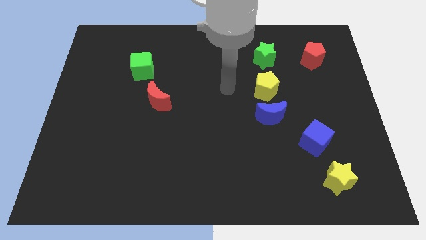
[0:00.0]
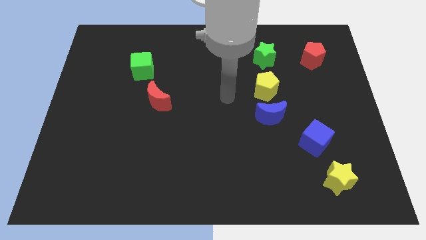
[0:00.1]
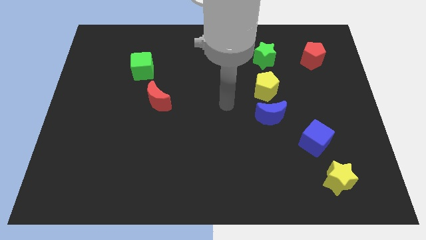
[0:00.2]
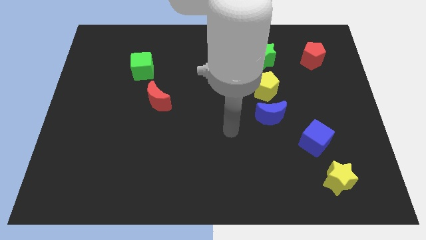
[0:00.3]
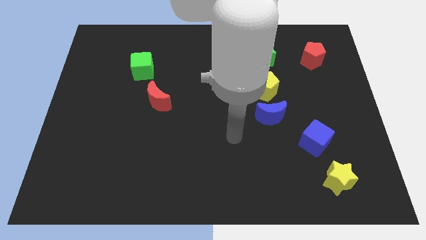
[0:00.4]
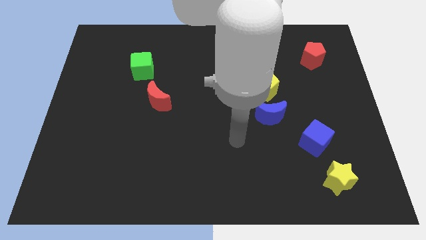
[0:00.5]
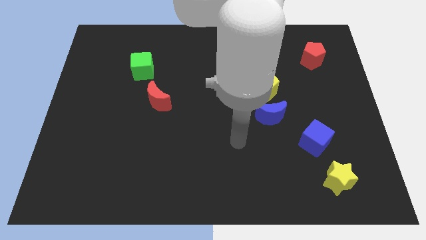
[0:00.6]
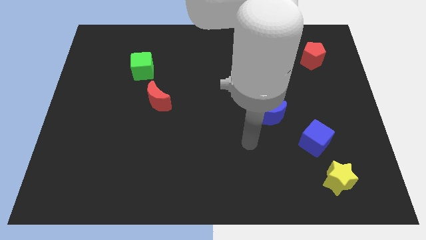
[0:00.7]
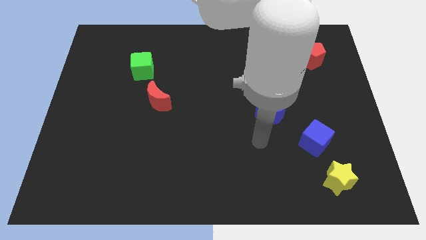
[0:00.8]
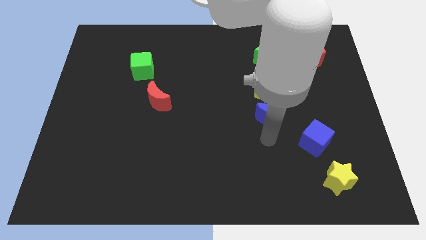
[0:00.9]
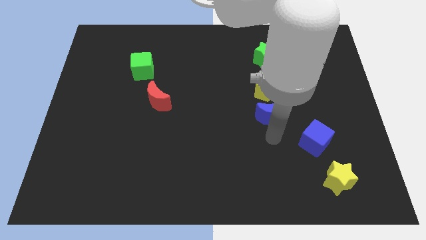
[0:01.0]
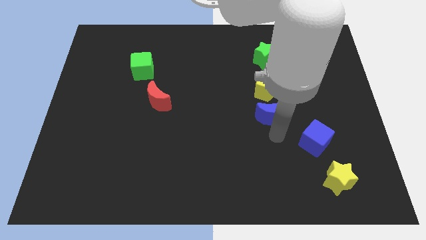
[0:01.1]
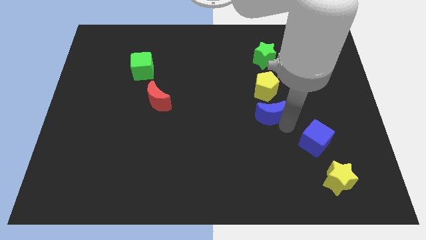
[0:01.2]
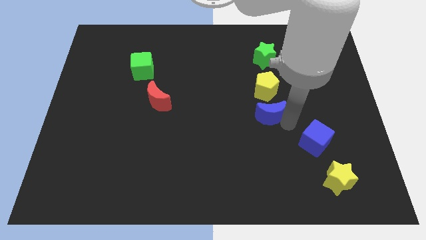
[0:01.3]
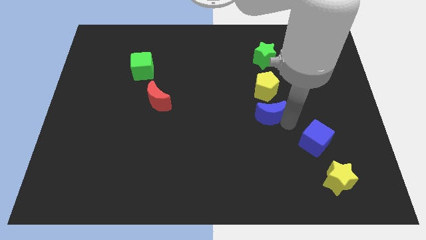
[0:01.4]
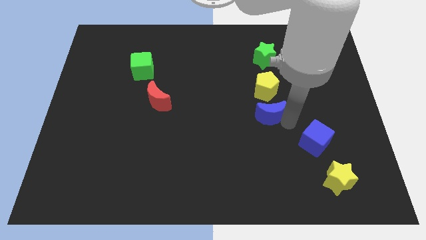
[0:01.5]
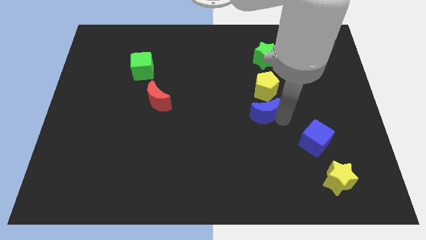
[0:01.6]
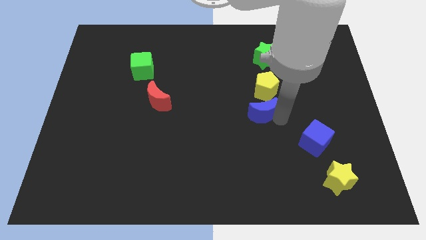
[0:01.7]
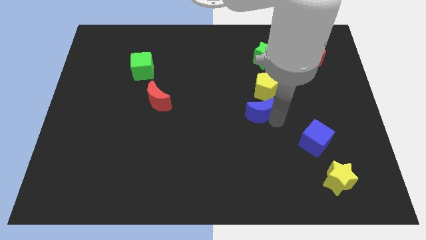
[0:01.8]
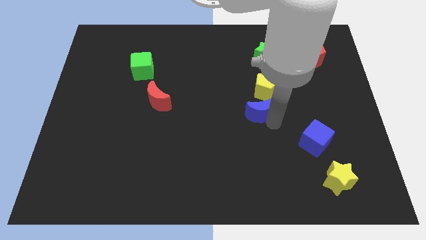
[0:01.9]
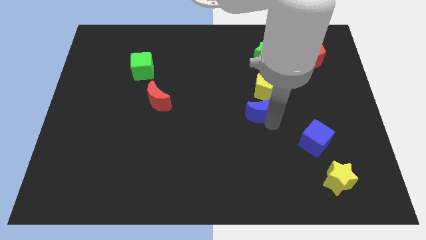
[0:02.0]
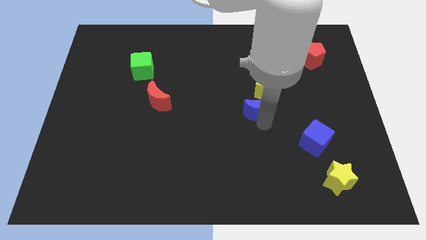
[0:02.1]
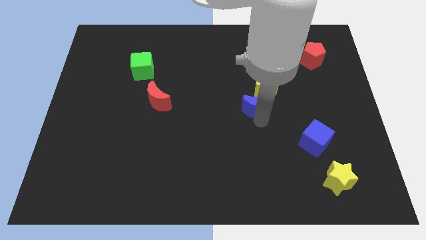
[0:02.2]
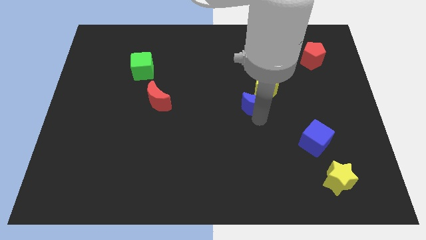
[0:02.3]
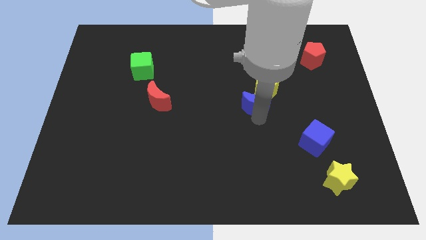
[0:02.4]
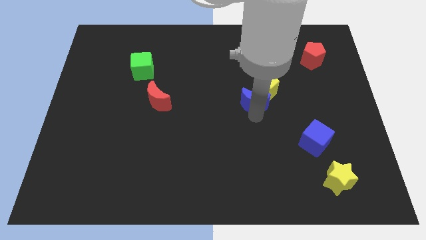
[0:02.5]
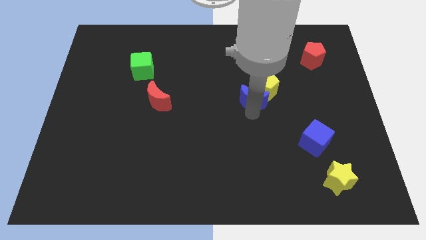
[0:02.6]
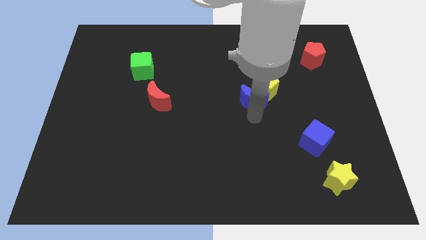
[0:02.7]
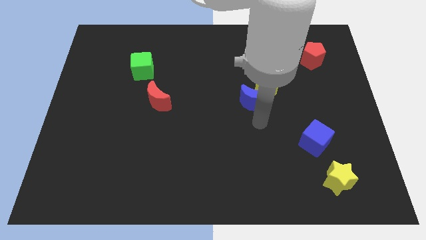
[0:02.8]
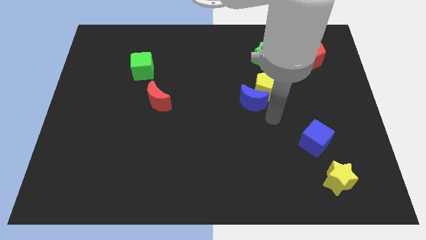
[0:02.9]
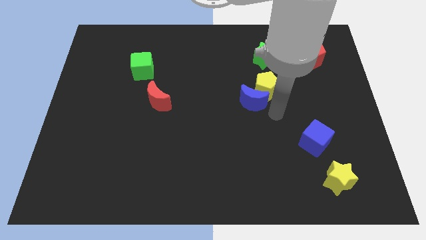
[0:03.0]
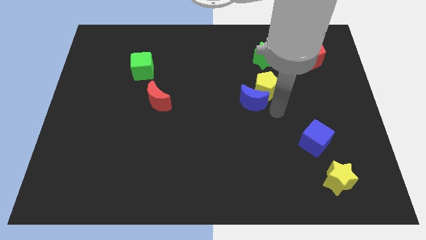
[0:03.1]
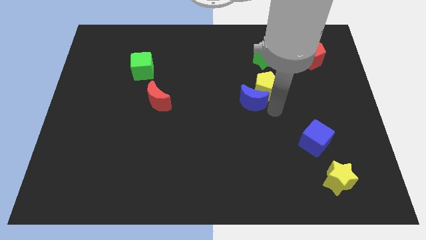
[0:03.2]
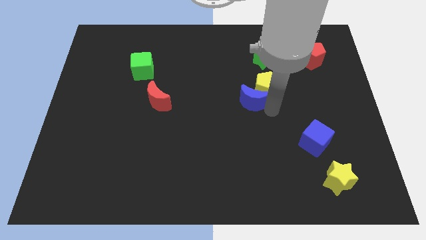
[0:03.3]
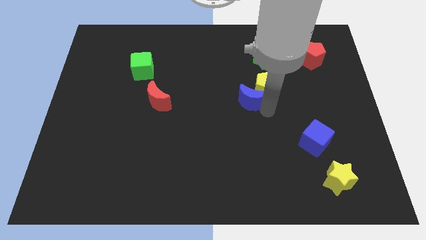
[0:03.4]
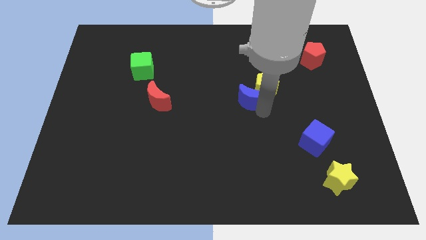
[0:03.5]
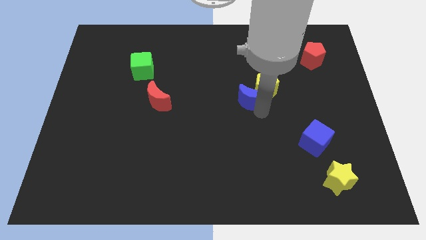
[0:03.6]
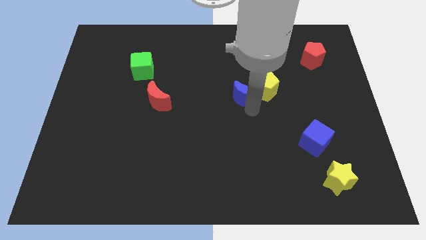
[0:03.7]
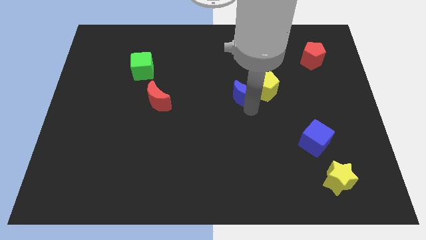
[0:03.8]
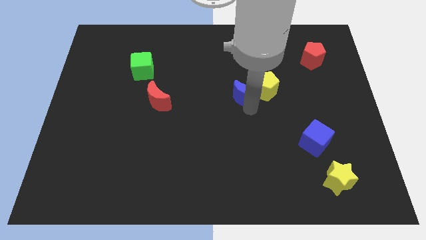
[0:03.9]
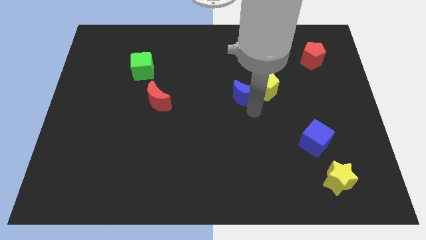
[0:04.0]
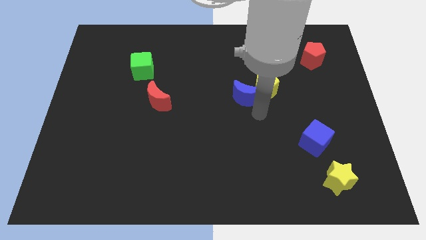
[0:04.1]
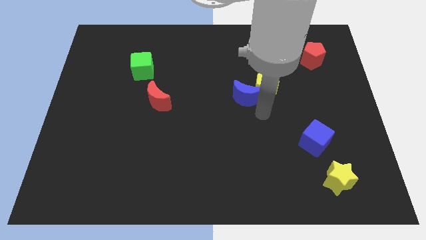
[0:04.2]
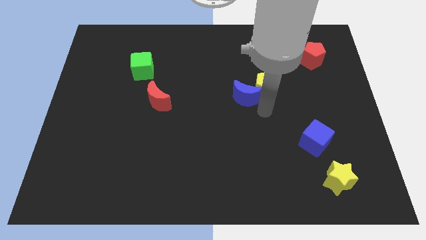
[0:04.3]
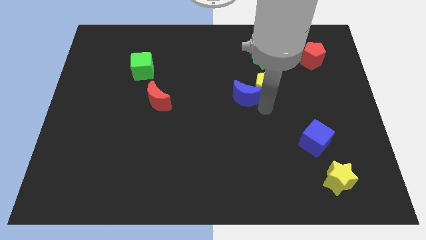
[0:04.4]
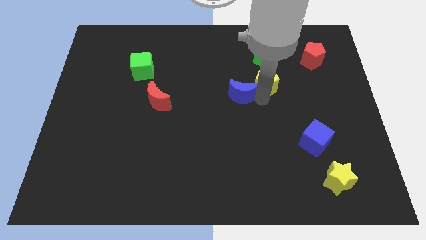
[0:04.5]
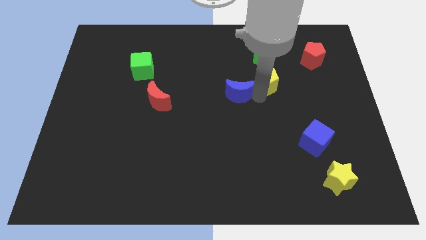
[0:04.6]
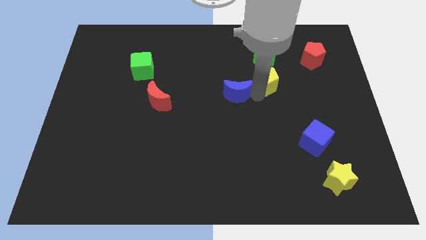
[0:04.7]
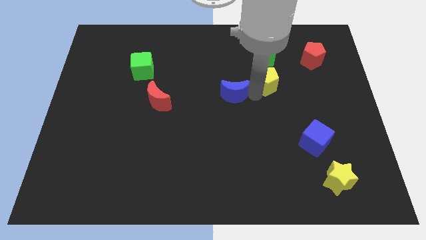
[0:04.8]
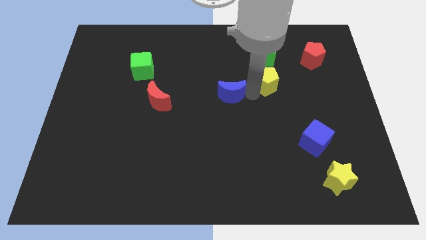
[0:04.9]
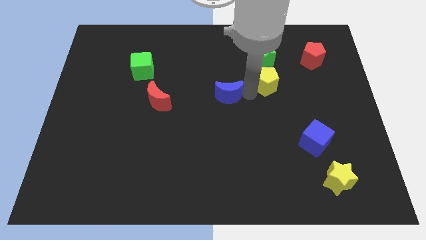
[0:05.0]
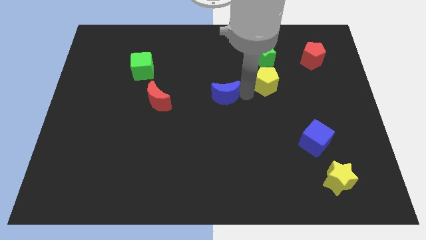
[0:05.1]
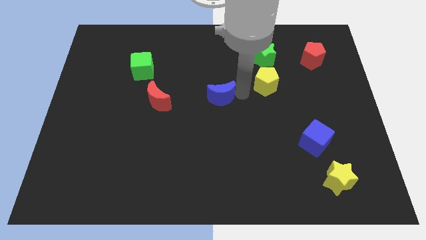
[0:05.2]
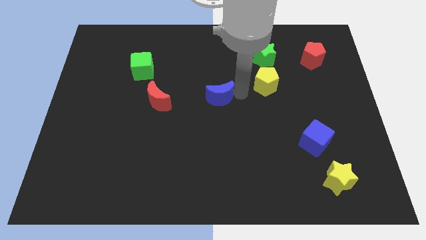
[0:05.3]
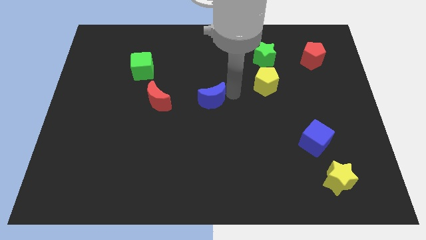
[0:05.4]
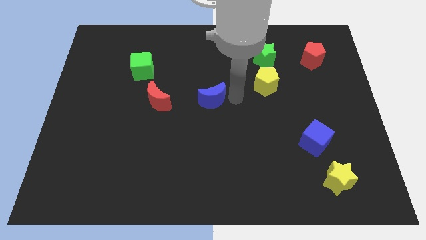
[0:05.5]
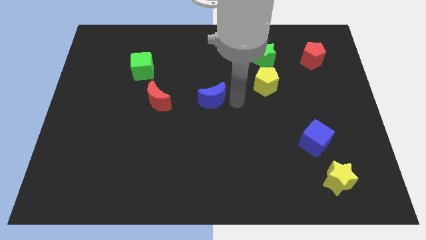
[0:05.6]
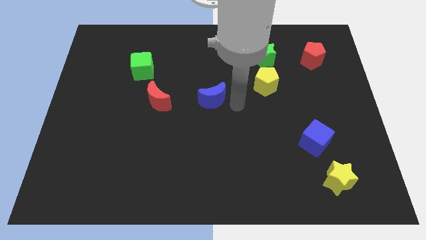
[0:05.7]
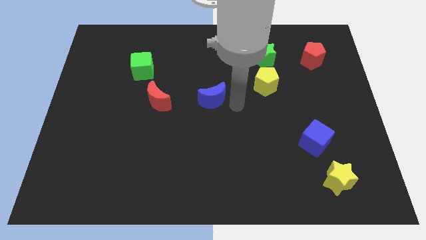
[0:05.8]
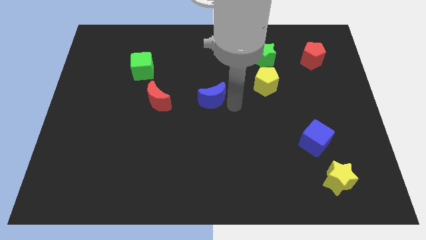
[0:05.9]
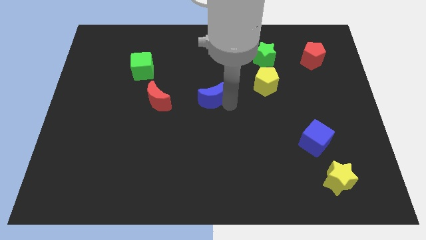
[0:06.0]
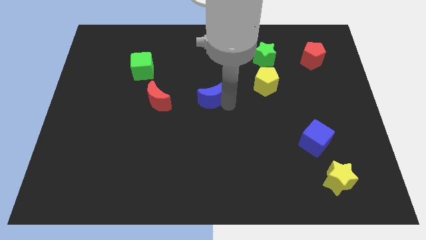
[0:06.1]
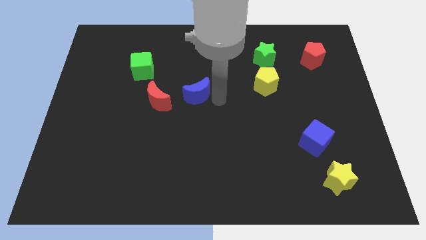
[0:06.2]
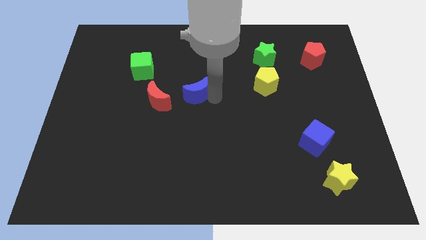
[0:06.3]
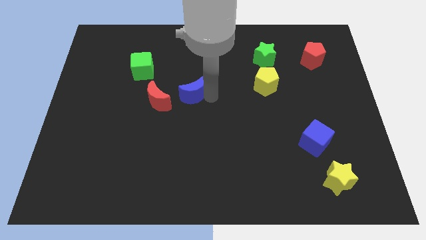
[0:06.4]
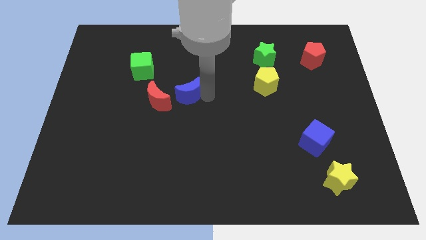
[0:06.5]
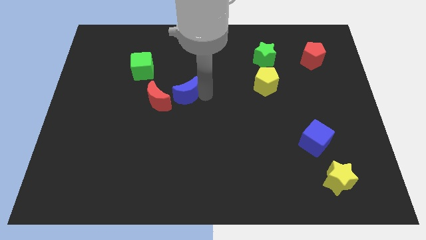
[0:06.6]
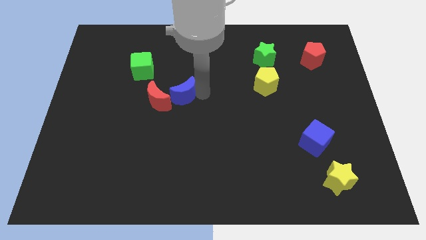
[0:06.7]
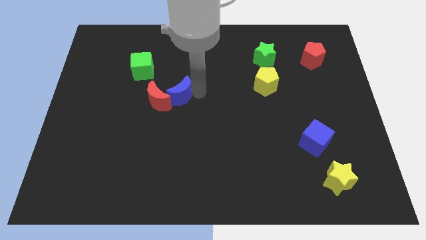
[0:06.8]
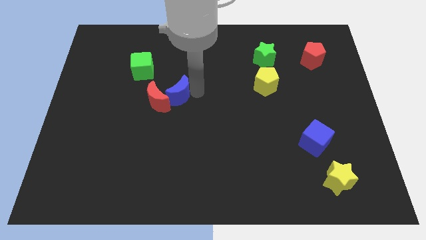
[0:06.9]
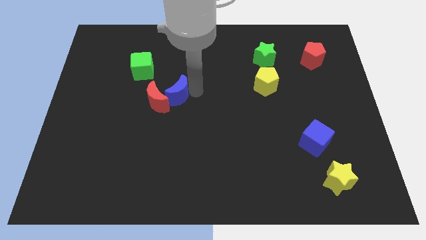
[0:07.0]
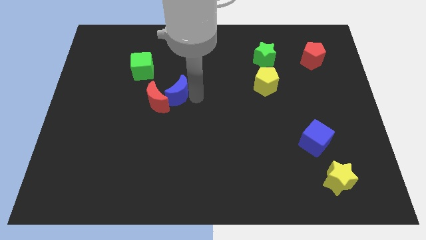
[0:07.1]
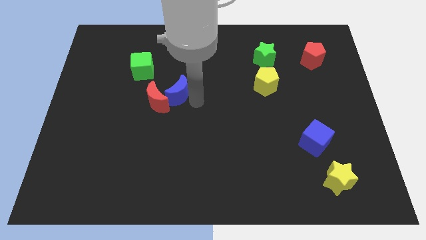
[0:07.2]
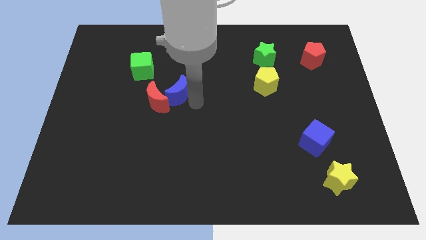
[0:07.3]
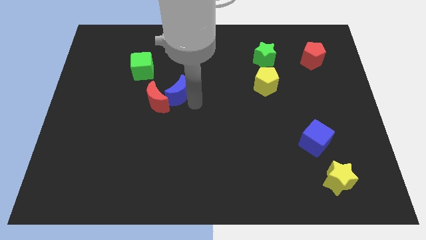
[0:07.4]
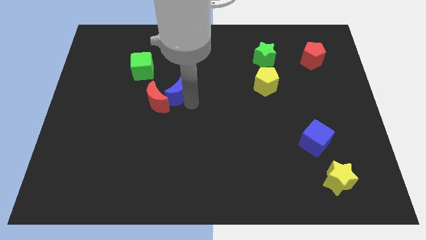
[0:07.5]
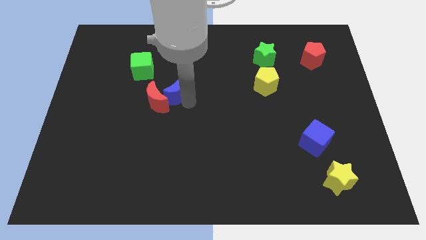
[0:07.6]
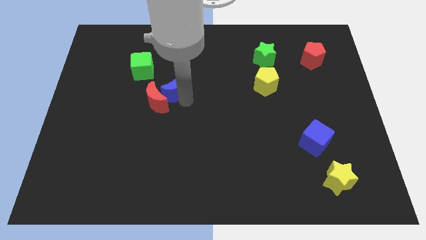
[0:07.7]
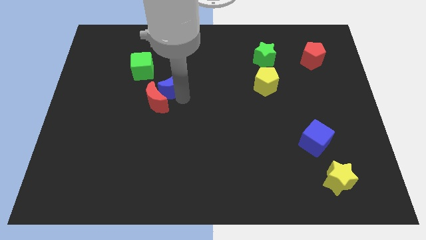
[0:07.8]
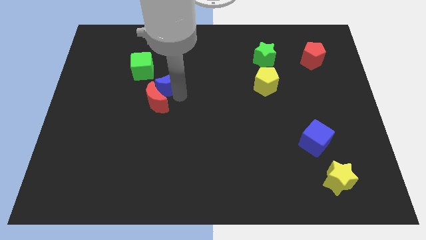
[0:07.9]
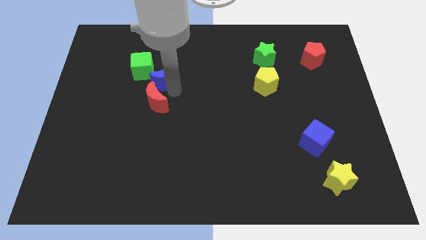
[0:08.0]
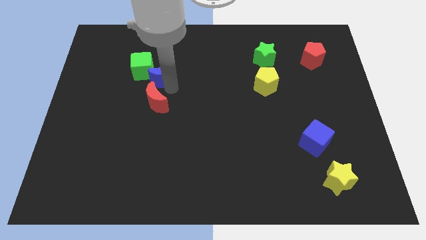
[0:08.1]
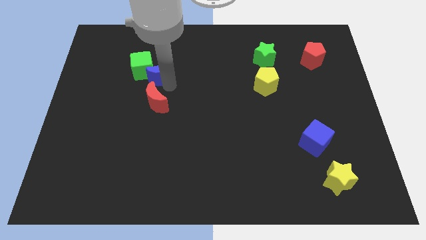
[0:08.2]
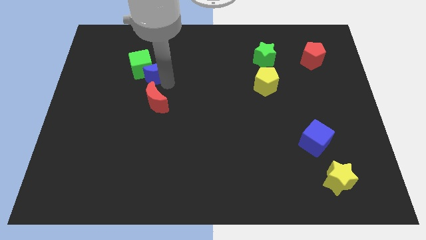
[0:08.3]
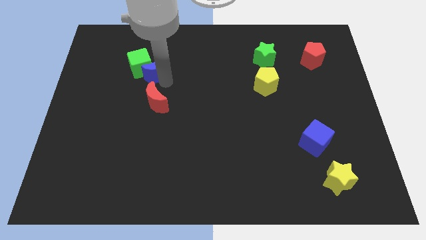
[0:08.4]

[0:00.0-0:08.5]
move the blue moon close to the green cube
